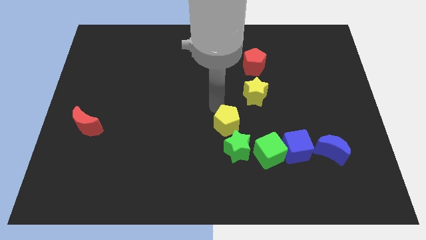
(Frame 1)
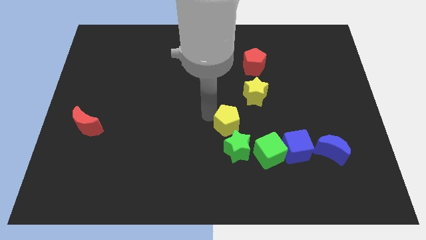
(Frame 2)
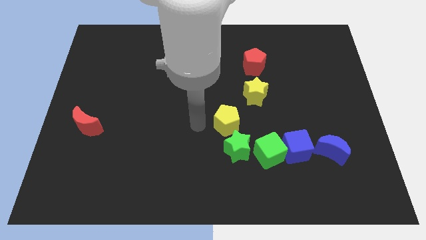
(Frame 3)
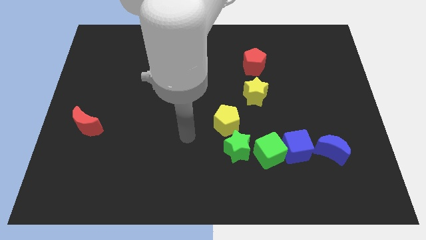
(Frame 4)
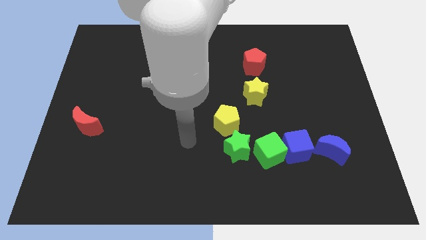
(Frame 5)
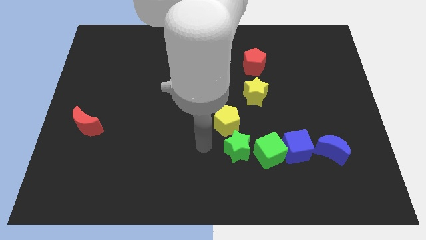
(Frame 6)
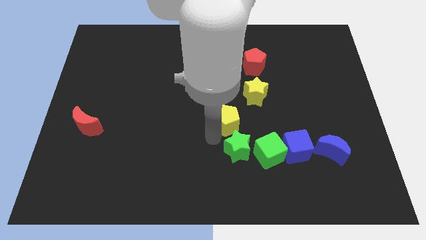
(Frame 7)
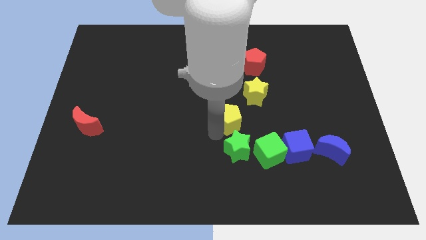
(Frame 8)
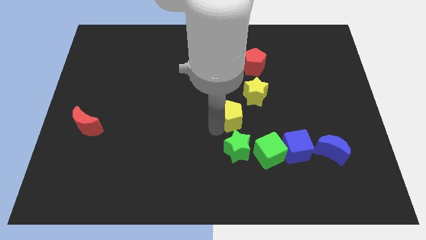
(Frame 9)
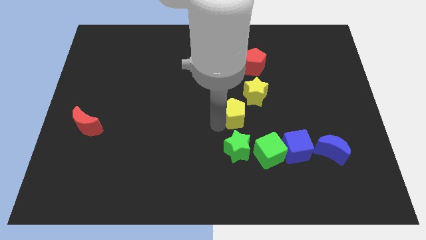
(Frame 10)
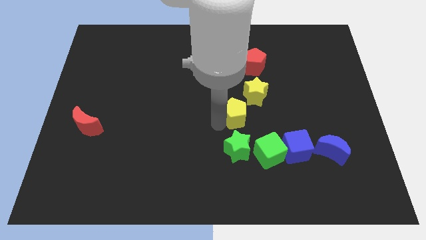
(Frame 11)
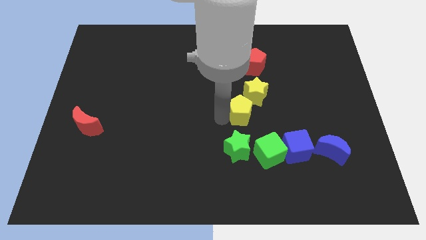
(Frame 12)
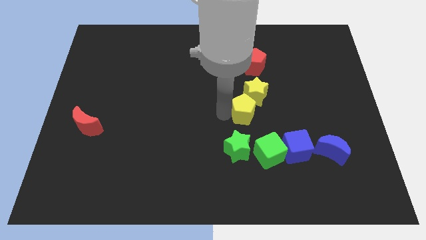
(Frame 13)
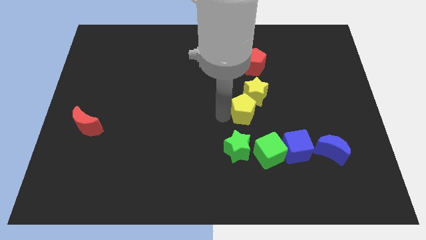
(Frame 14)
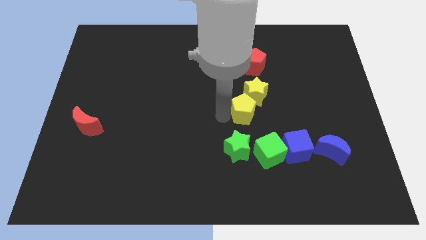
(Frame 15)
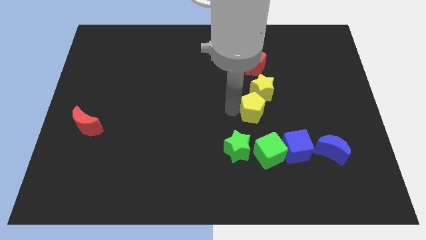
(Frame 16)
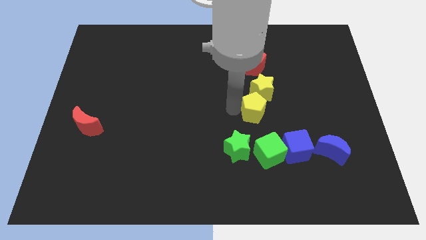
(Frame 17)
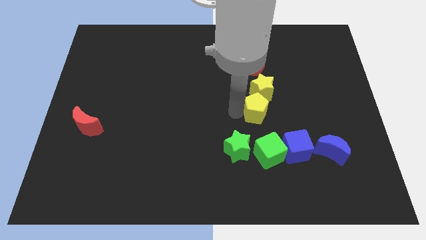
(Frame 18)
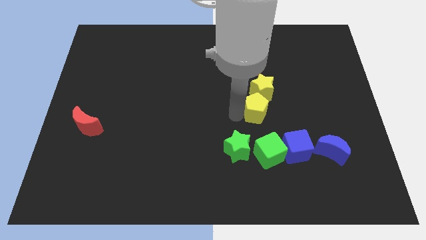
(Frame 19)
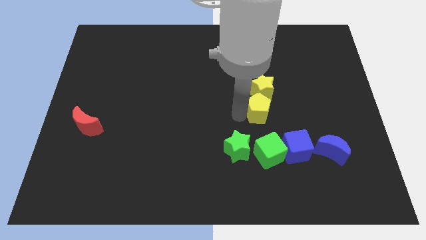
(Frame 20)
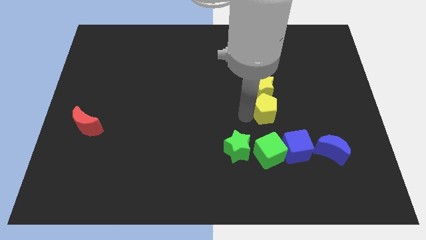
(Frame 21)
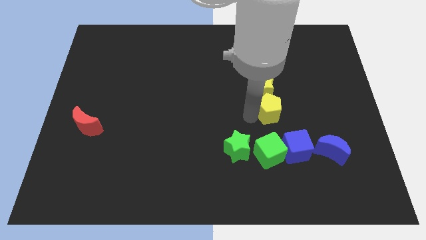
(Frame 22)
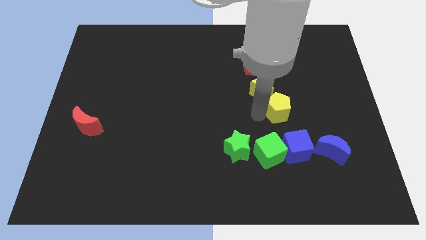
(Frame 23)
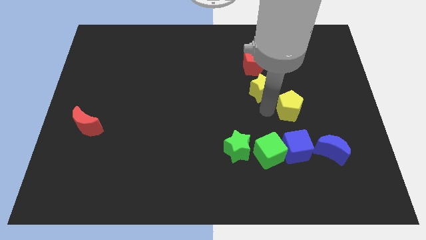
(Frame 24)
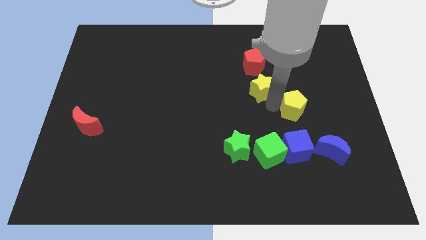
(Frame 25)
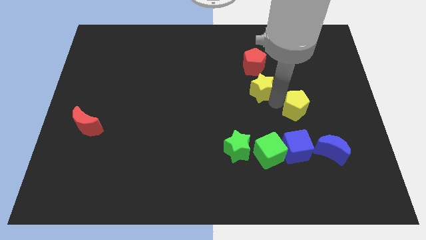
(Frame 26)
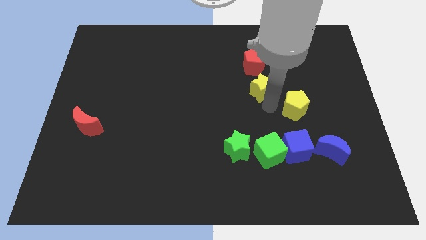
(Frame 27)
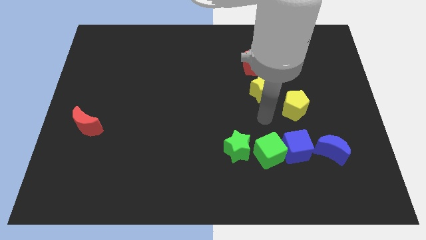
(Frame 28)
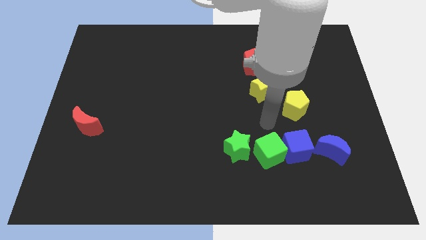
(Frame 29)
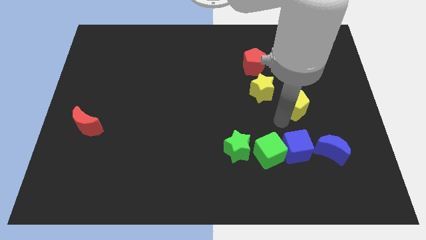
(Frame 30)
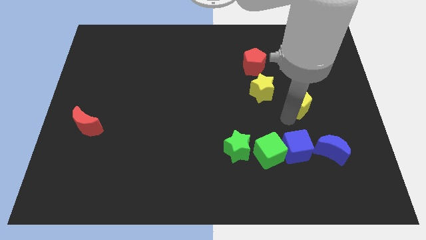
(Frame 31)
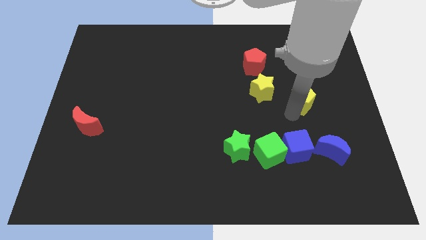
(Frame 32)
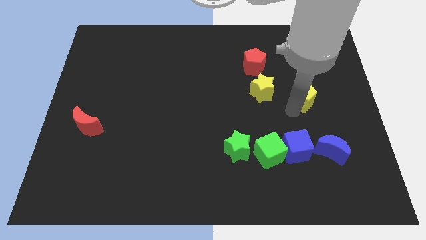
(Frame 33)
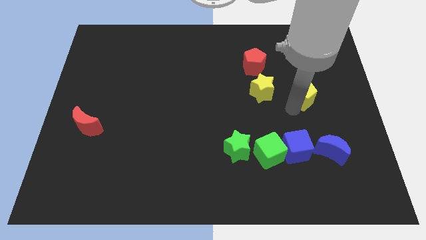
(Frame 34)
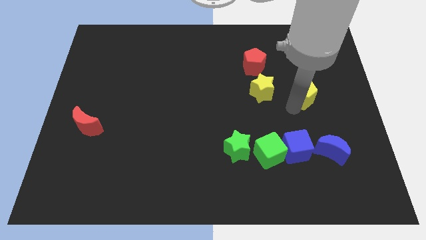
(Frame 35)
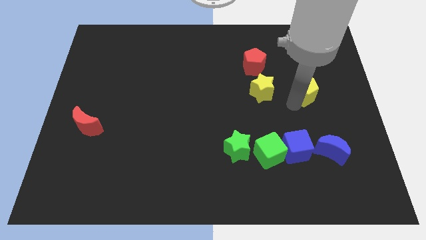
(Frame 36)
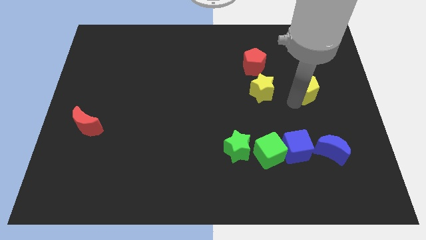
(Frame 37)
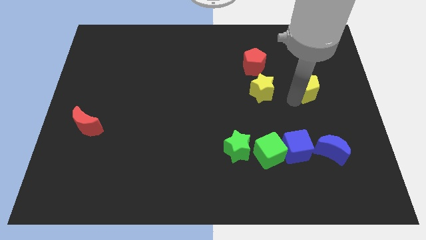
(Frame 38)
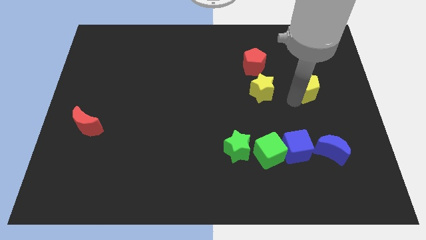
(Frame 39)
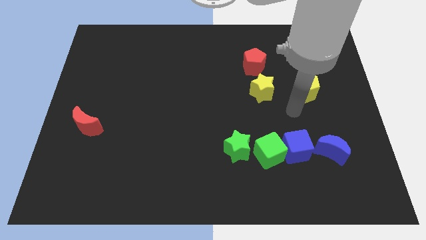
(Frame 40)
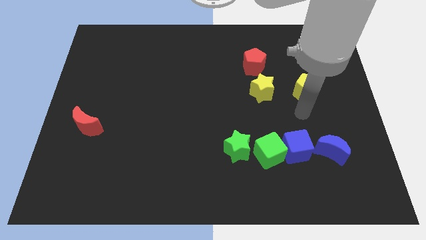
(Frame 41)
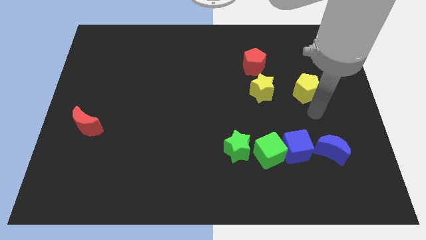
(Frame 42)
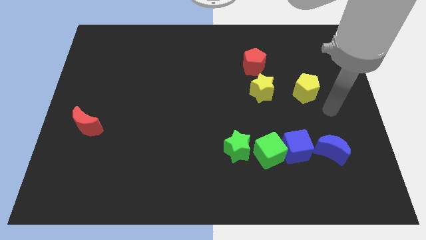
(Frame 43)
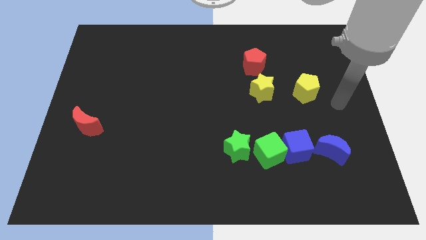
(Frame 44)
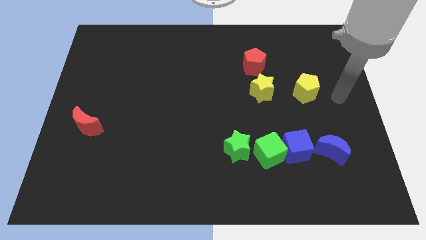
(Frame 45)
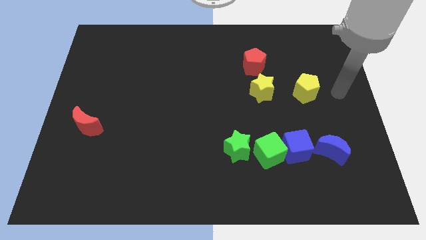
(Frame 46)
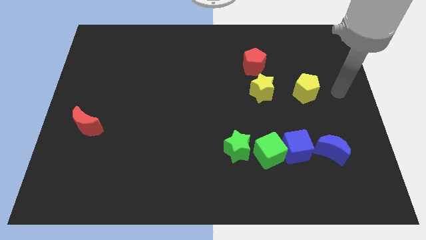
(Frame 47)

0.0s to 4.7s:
move the yellow pentagon parallel right to the yellow star

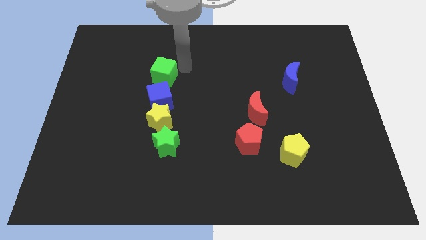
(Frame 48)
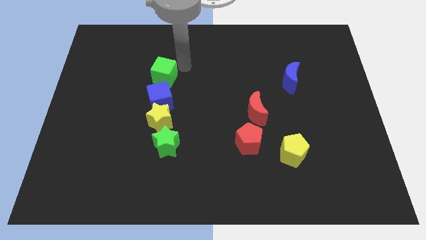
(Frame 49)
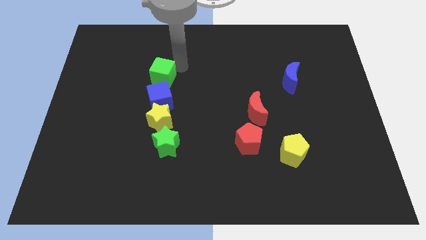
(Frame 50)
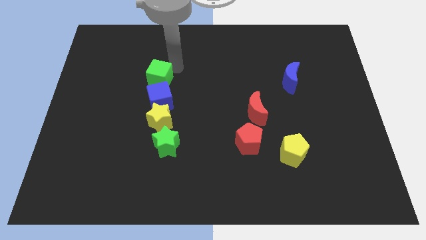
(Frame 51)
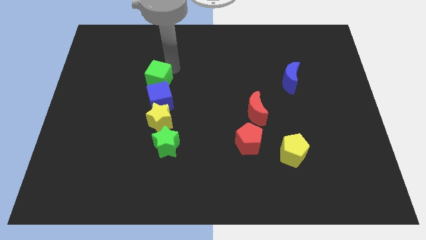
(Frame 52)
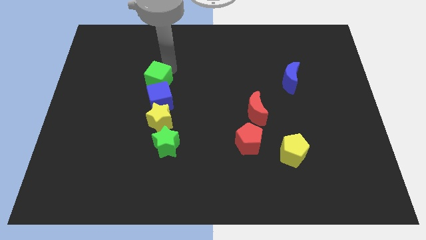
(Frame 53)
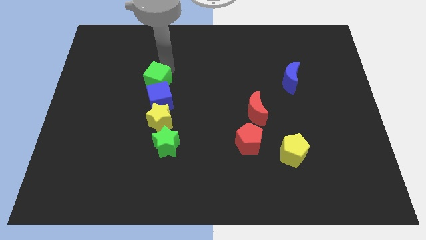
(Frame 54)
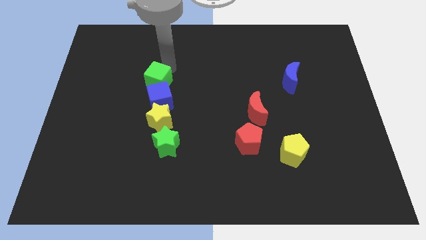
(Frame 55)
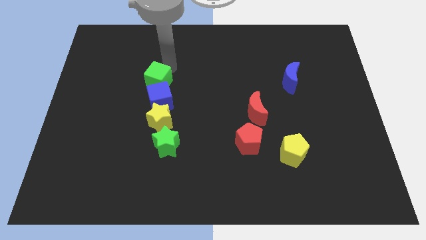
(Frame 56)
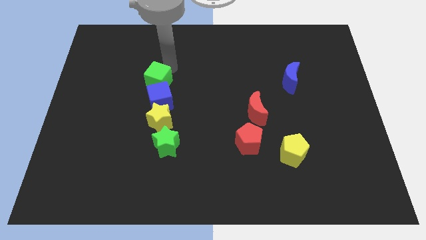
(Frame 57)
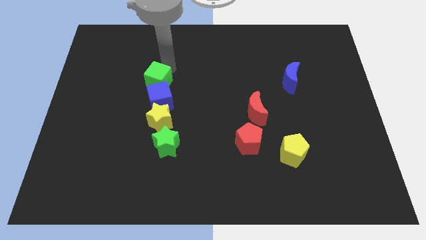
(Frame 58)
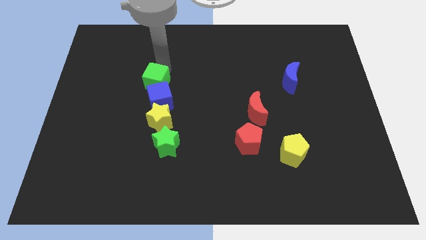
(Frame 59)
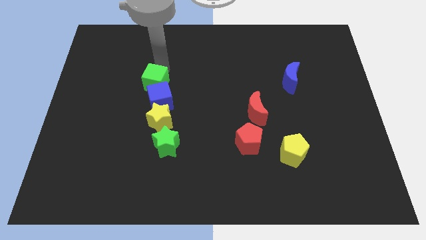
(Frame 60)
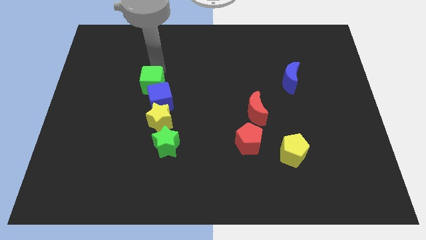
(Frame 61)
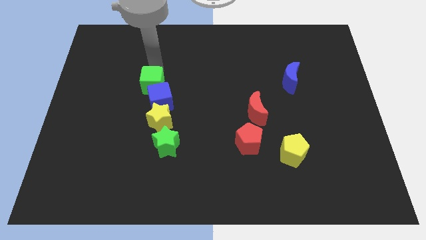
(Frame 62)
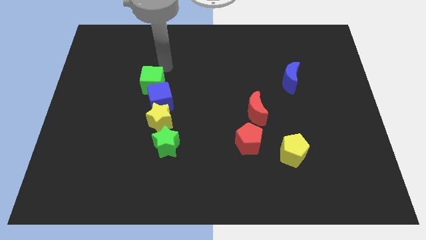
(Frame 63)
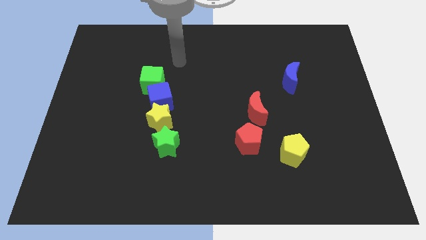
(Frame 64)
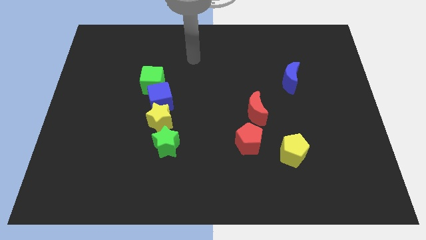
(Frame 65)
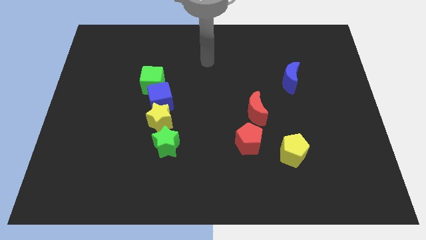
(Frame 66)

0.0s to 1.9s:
push the green cube into the blue cube

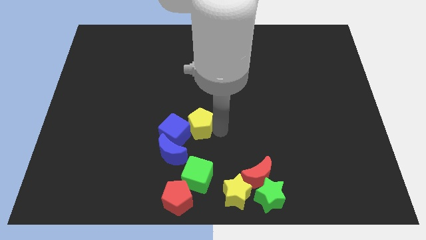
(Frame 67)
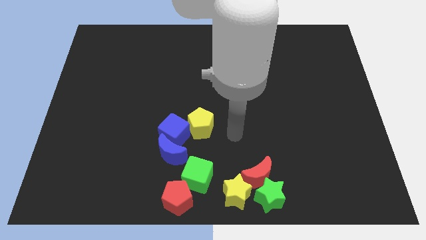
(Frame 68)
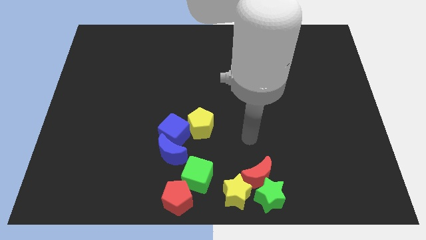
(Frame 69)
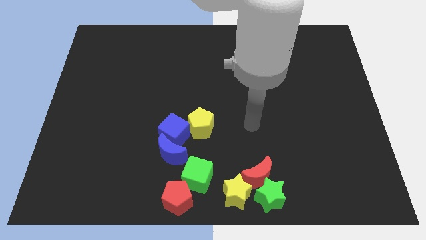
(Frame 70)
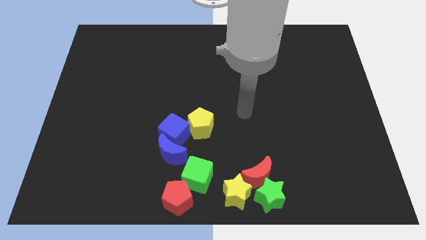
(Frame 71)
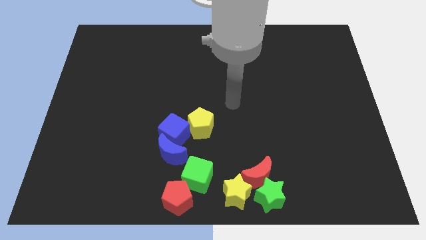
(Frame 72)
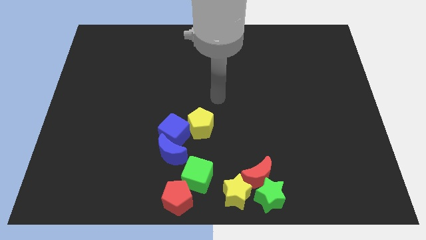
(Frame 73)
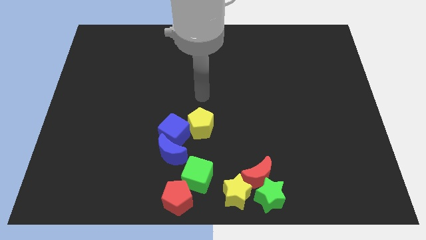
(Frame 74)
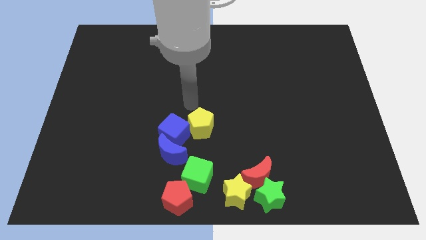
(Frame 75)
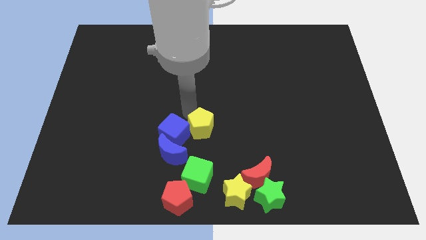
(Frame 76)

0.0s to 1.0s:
point your arm at the top left side of yellow pentagon

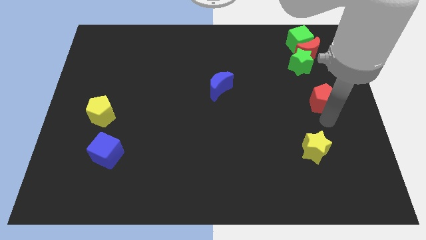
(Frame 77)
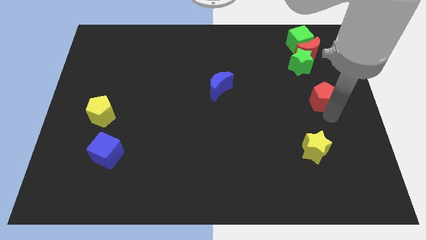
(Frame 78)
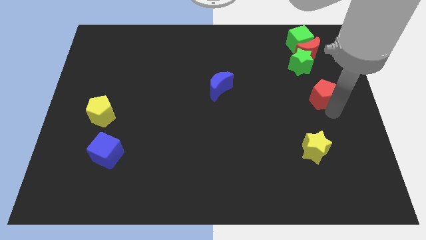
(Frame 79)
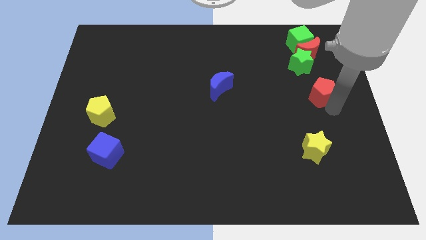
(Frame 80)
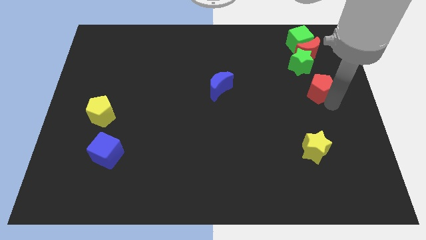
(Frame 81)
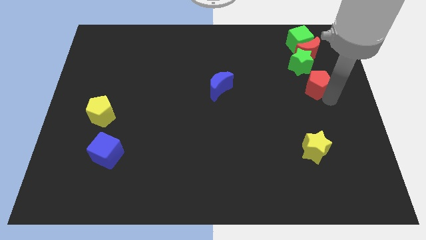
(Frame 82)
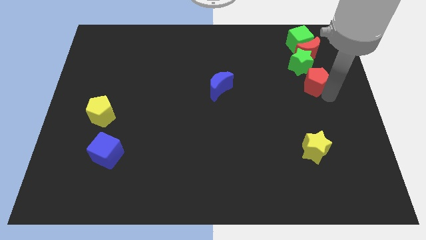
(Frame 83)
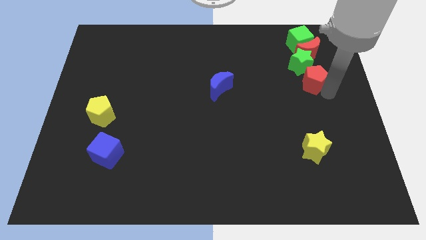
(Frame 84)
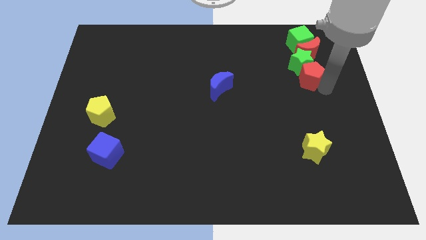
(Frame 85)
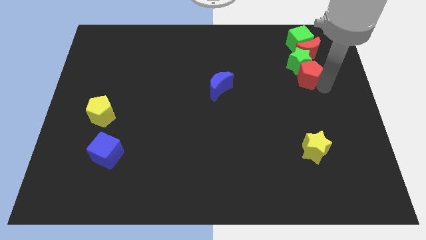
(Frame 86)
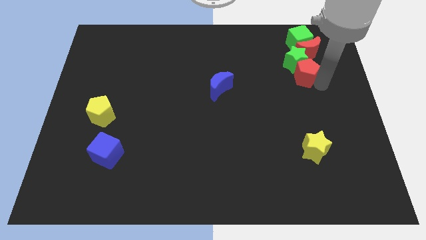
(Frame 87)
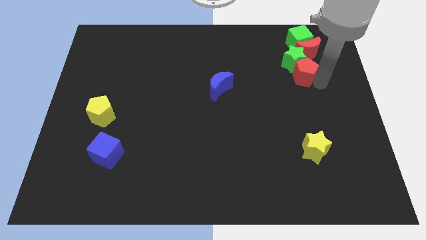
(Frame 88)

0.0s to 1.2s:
push the red pentagon into the green star

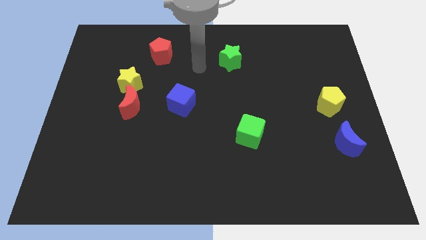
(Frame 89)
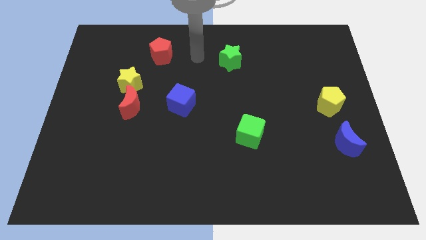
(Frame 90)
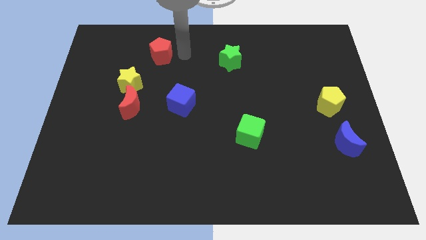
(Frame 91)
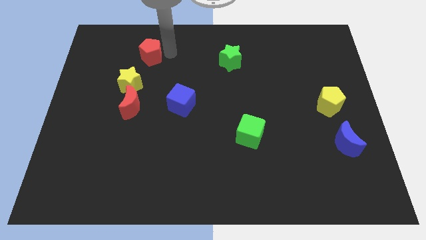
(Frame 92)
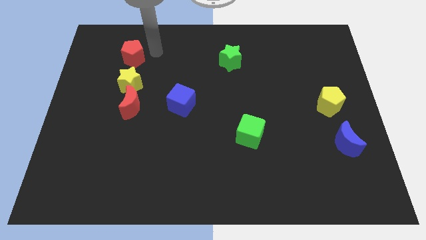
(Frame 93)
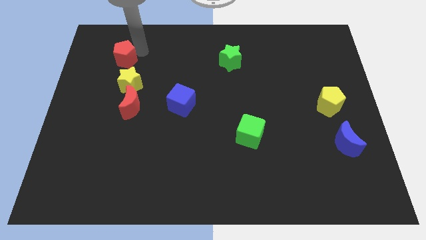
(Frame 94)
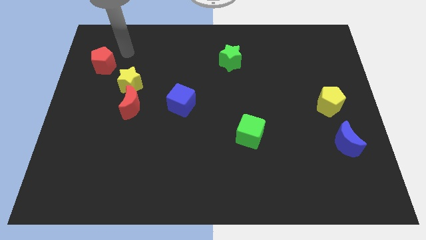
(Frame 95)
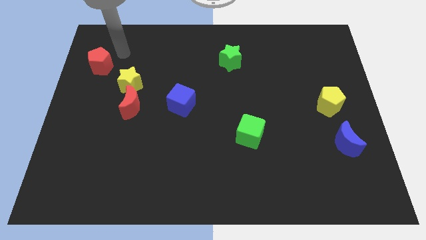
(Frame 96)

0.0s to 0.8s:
put the red pentagon diagonally at the top left of the yellow star
